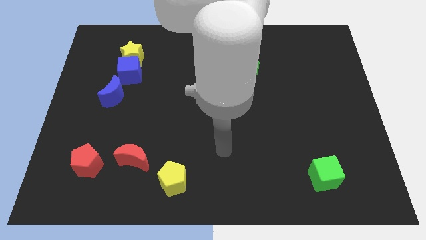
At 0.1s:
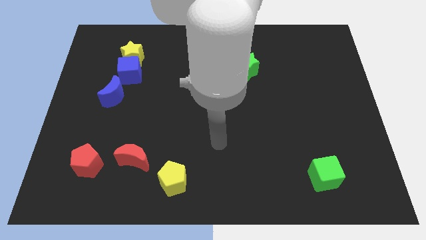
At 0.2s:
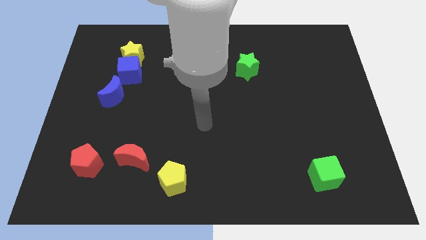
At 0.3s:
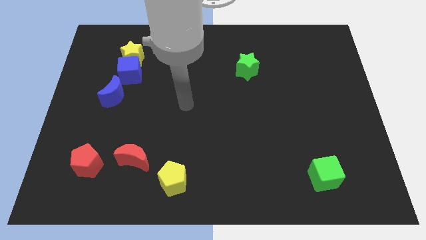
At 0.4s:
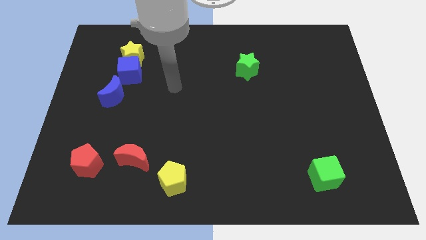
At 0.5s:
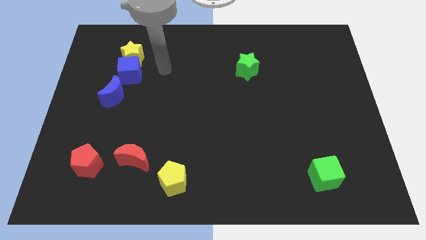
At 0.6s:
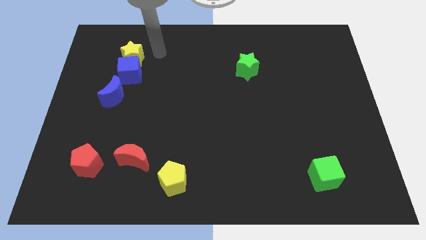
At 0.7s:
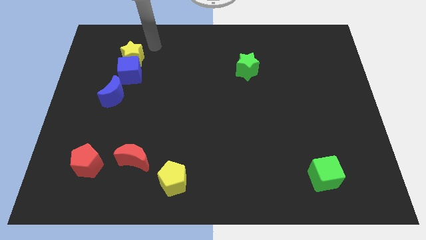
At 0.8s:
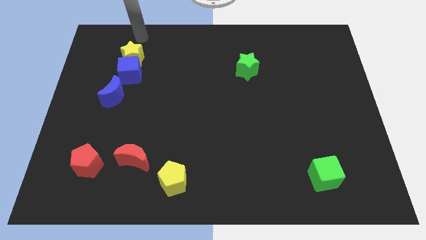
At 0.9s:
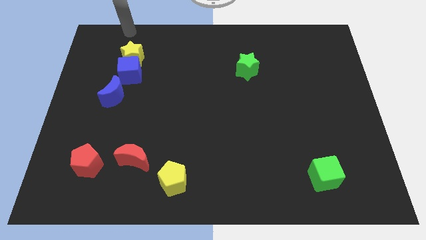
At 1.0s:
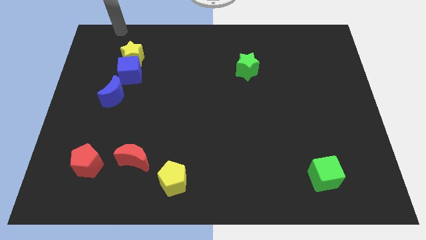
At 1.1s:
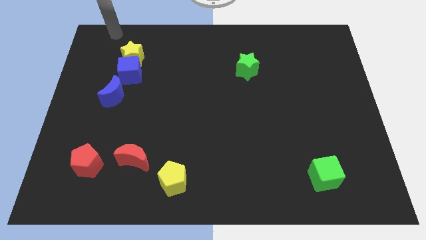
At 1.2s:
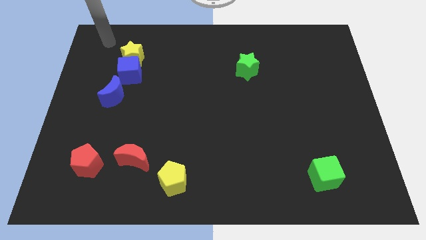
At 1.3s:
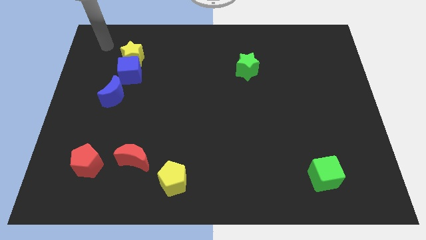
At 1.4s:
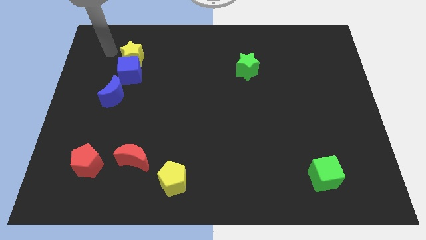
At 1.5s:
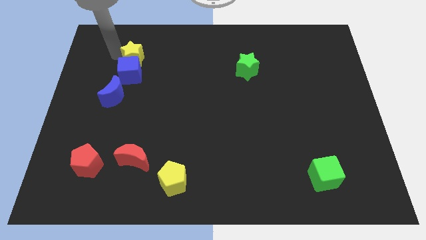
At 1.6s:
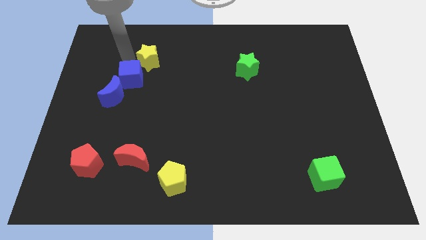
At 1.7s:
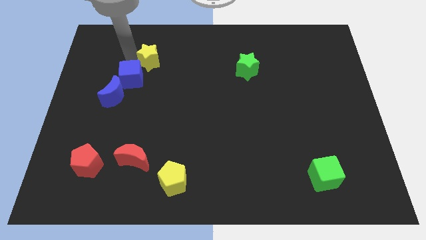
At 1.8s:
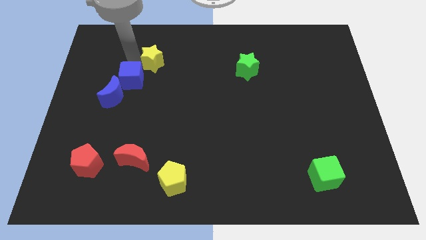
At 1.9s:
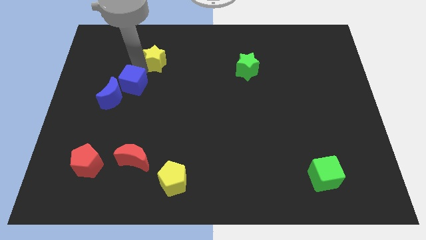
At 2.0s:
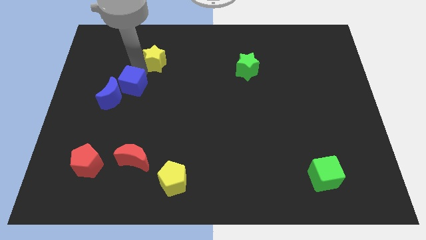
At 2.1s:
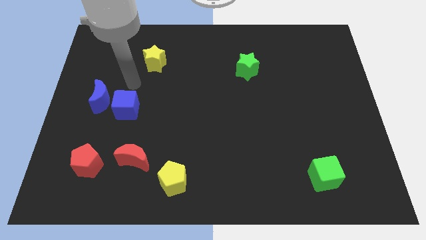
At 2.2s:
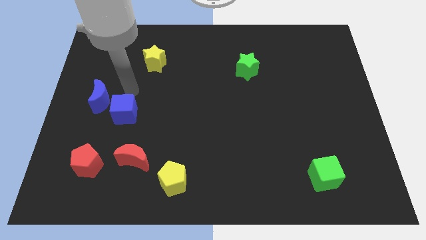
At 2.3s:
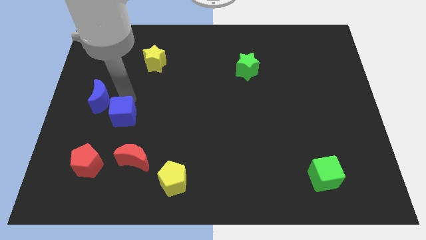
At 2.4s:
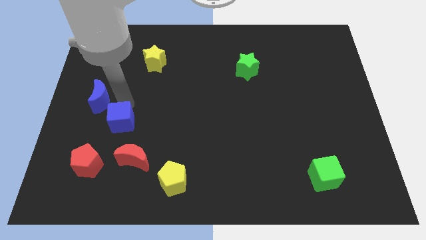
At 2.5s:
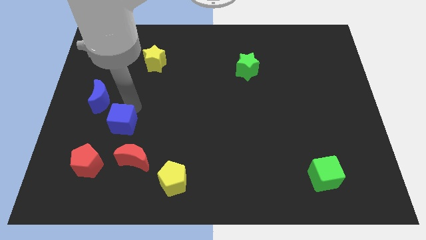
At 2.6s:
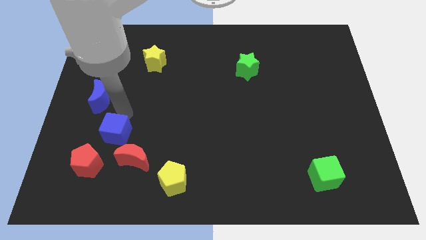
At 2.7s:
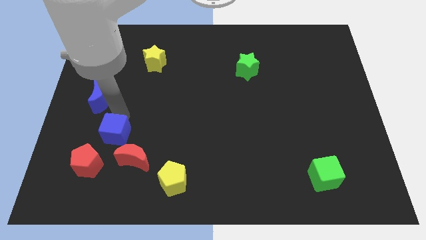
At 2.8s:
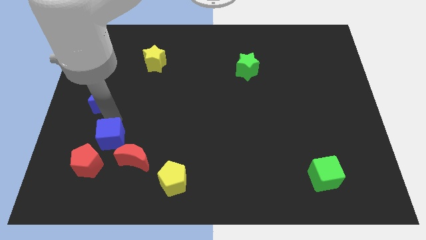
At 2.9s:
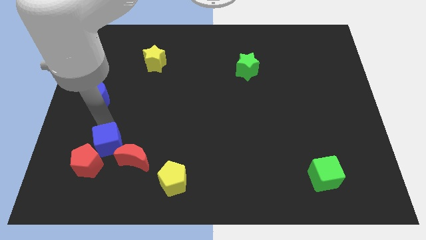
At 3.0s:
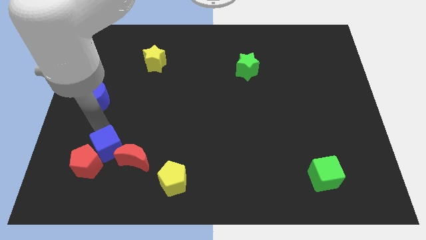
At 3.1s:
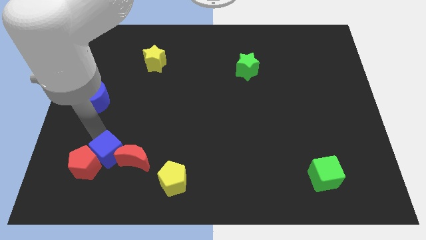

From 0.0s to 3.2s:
push the blue cube next to the red pentagon

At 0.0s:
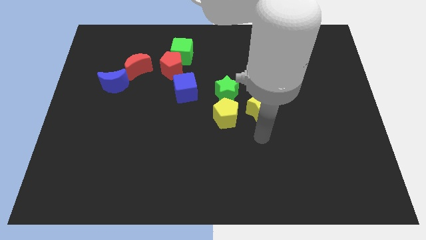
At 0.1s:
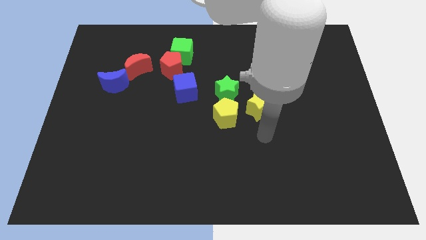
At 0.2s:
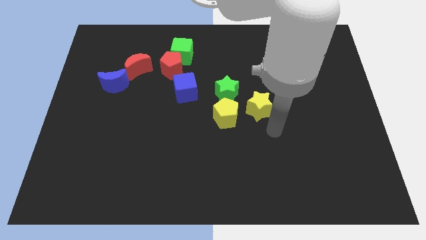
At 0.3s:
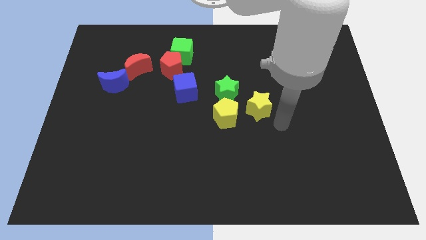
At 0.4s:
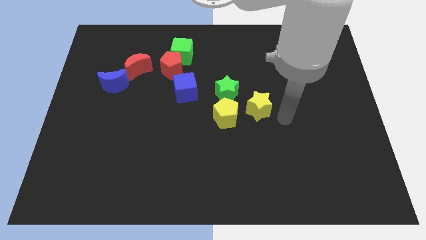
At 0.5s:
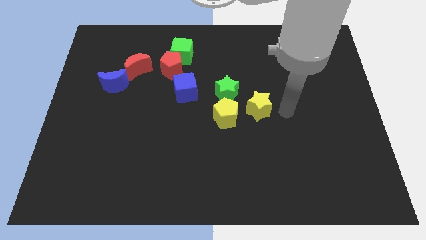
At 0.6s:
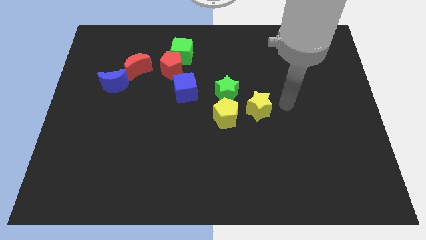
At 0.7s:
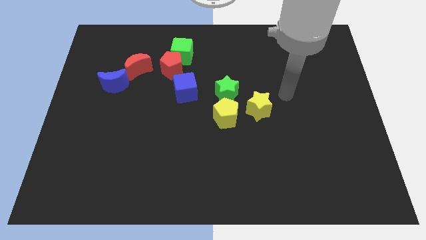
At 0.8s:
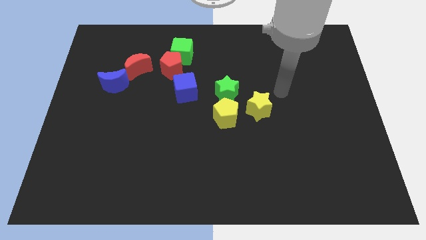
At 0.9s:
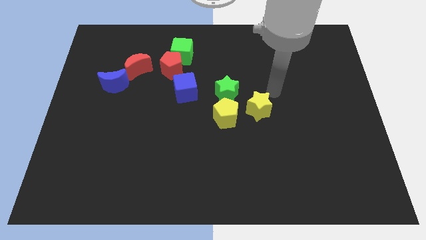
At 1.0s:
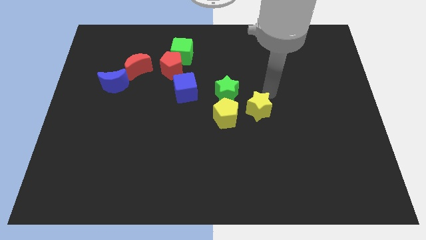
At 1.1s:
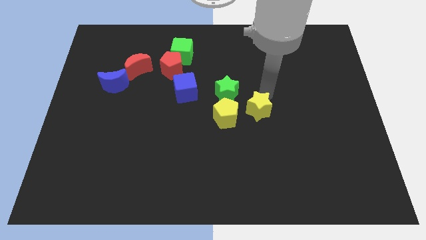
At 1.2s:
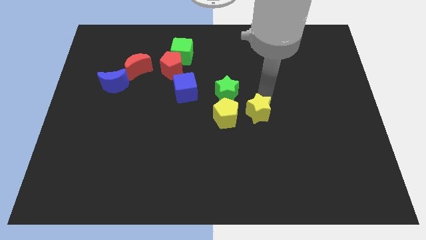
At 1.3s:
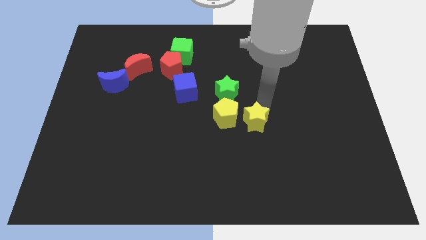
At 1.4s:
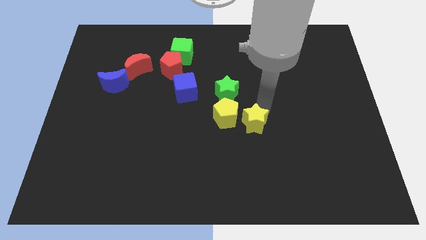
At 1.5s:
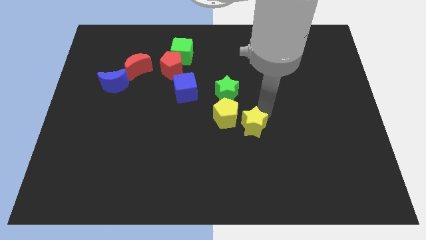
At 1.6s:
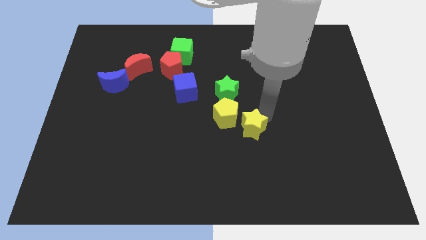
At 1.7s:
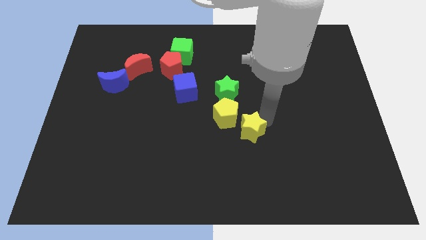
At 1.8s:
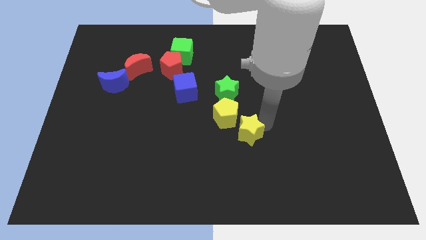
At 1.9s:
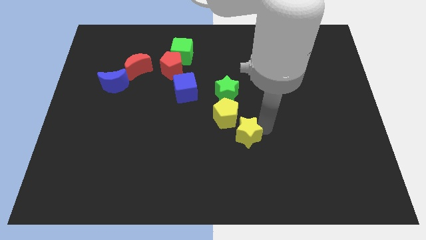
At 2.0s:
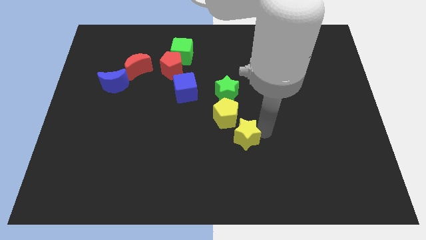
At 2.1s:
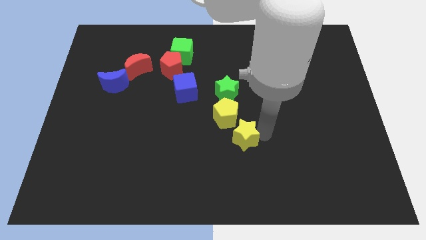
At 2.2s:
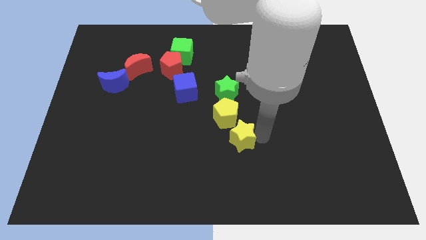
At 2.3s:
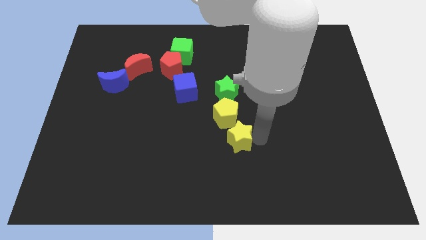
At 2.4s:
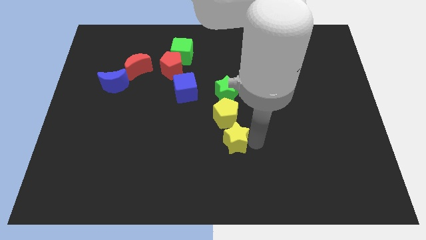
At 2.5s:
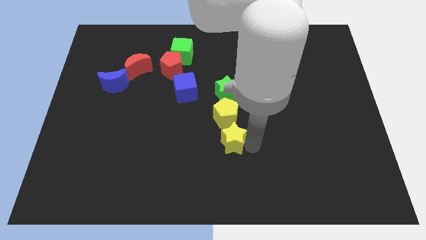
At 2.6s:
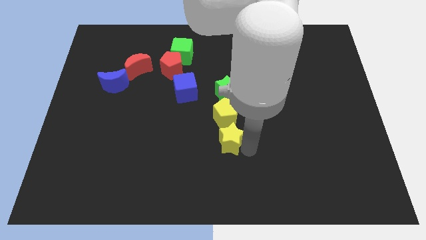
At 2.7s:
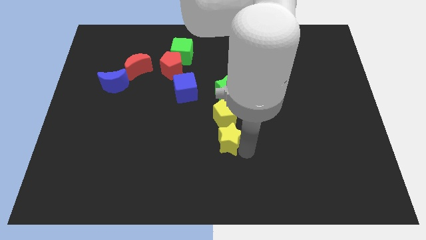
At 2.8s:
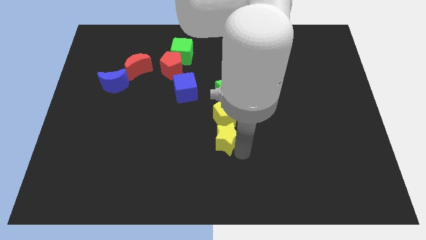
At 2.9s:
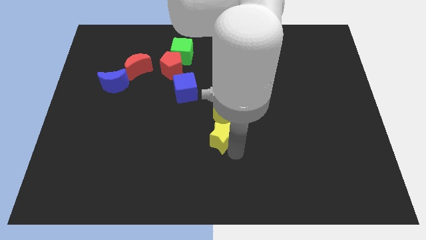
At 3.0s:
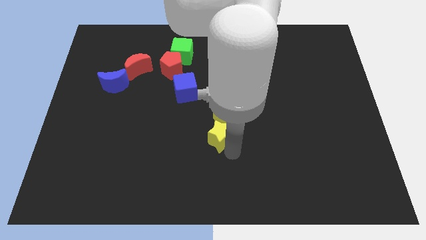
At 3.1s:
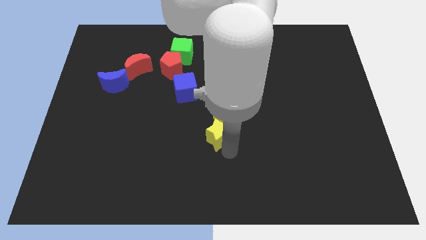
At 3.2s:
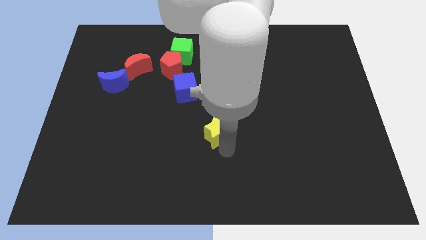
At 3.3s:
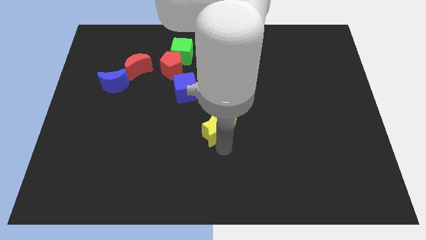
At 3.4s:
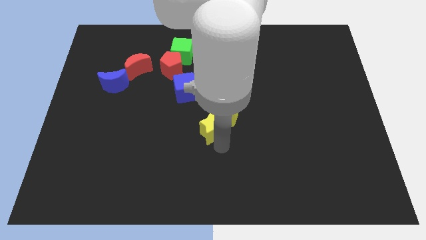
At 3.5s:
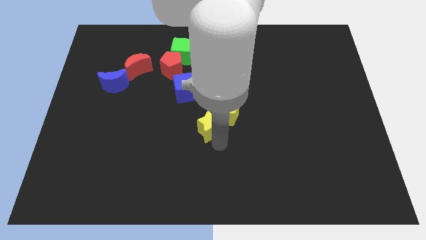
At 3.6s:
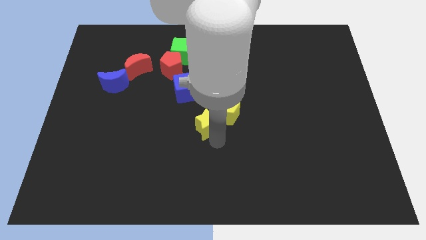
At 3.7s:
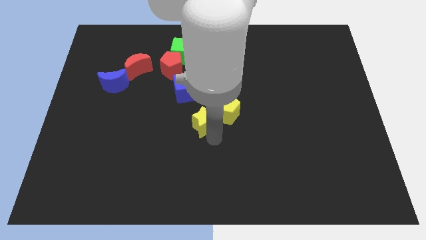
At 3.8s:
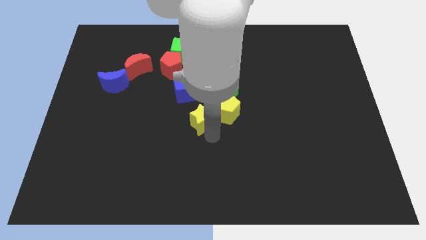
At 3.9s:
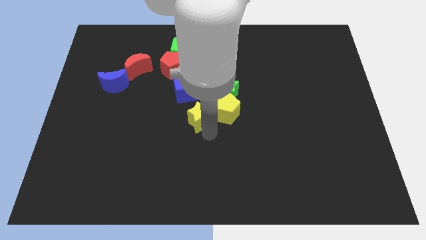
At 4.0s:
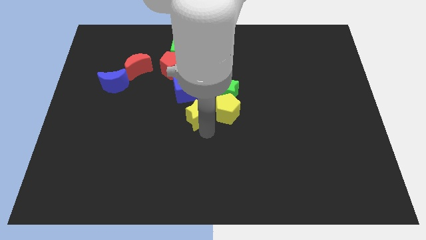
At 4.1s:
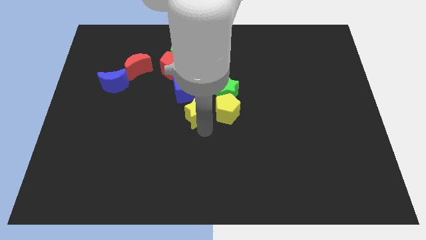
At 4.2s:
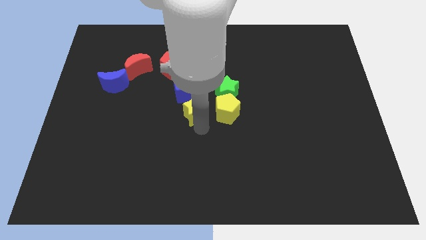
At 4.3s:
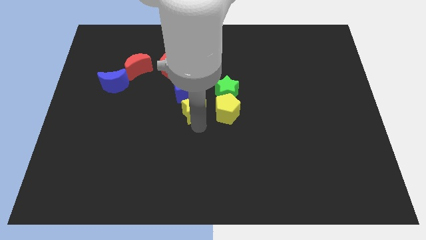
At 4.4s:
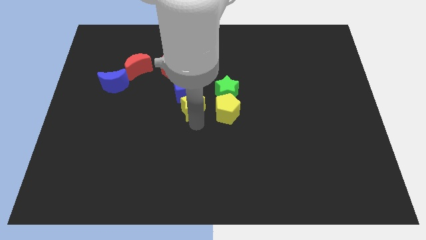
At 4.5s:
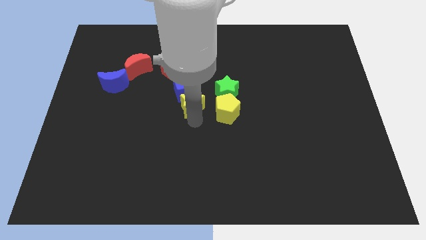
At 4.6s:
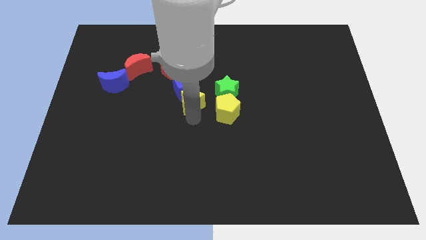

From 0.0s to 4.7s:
slide the yellow star next to the blue cube

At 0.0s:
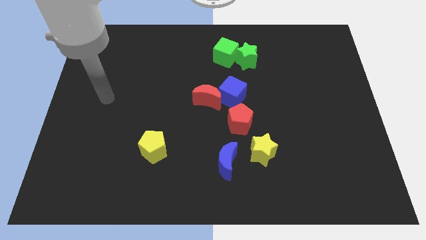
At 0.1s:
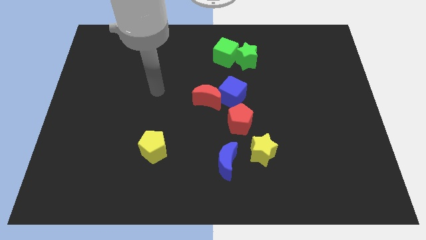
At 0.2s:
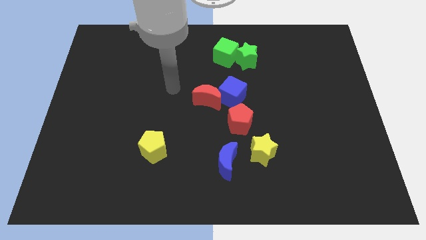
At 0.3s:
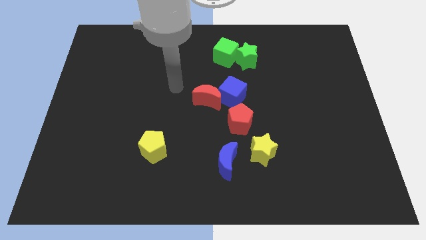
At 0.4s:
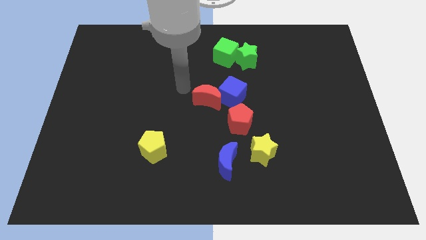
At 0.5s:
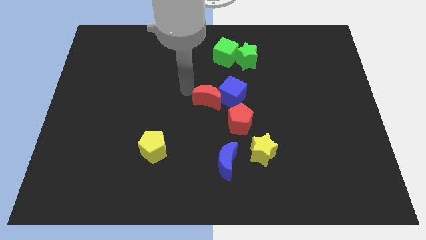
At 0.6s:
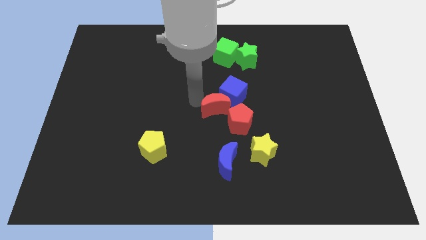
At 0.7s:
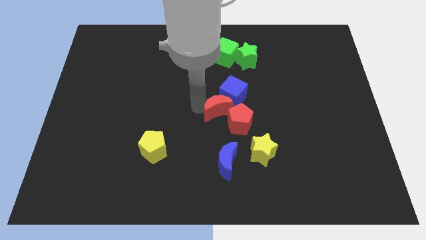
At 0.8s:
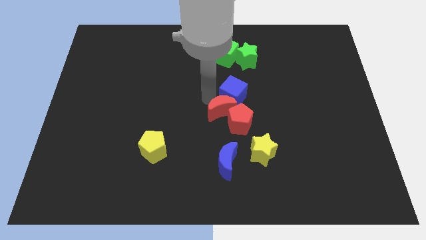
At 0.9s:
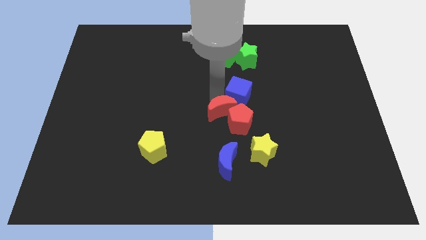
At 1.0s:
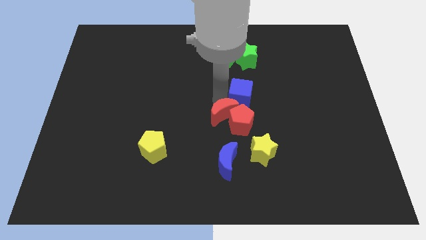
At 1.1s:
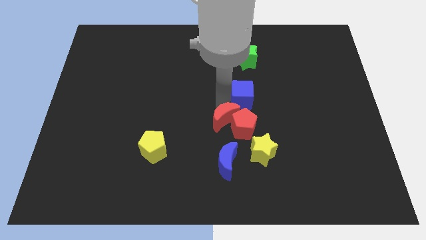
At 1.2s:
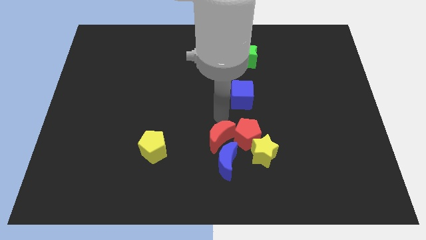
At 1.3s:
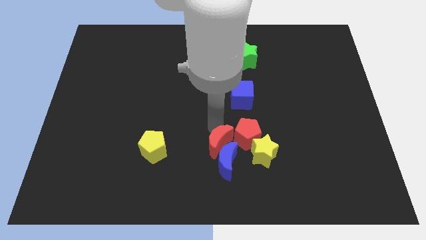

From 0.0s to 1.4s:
move the red moon next to the blue moon
